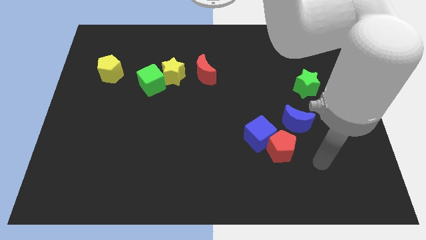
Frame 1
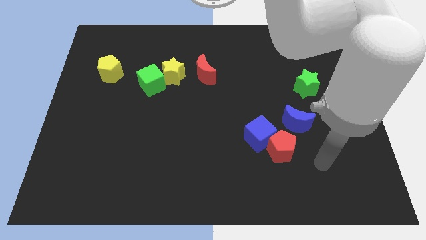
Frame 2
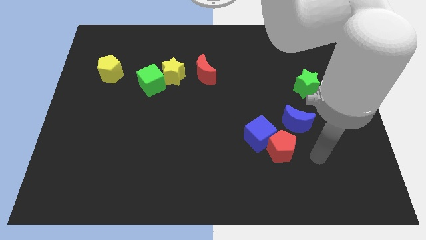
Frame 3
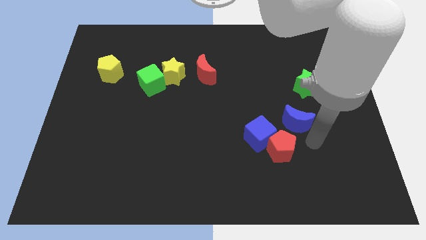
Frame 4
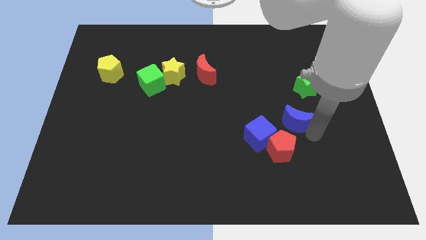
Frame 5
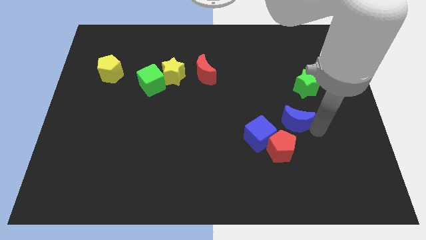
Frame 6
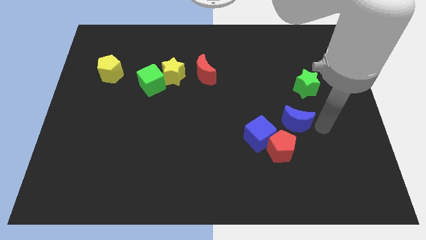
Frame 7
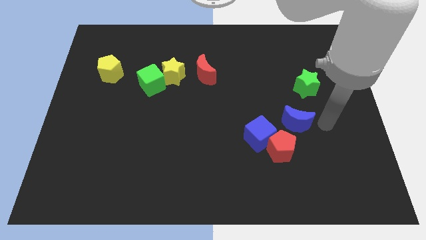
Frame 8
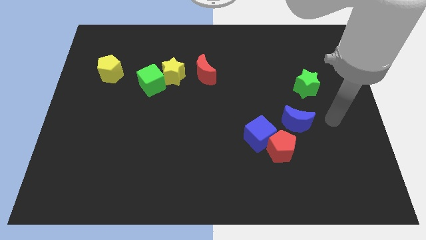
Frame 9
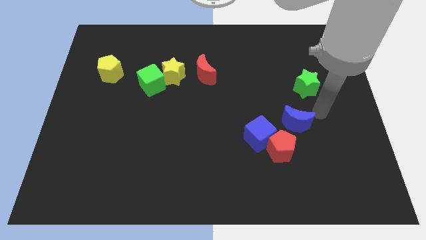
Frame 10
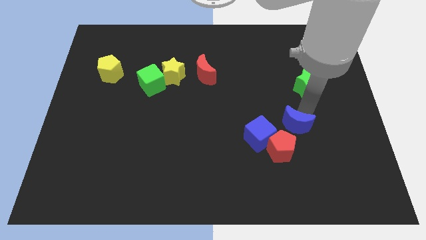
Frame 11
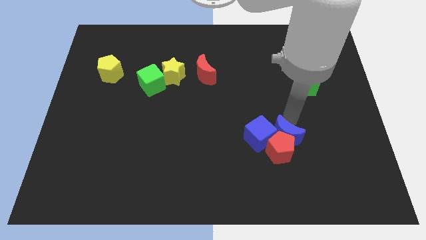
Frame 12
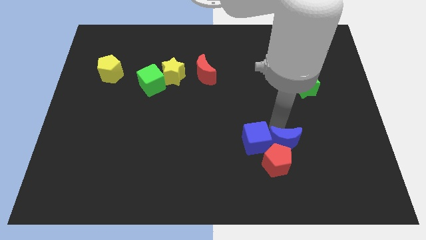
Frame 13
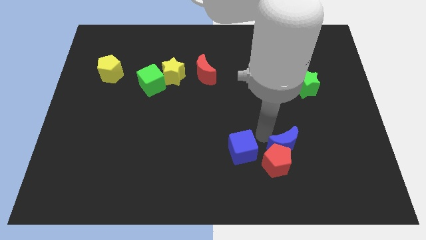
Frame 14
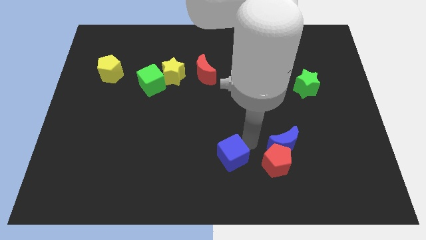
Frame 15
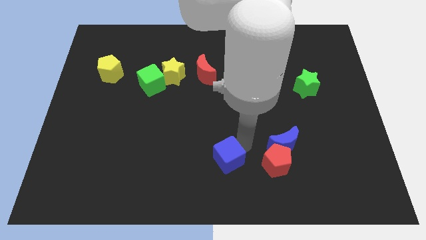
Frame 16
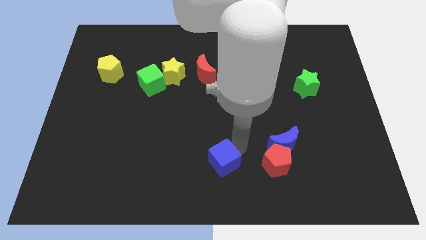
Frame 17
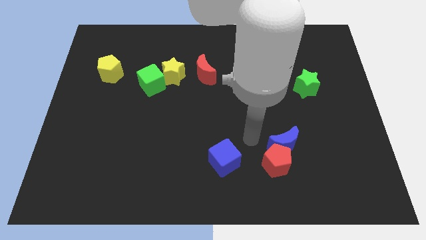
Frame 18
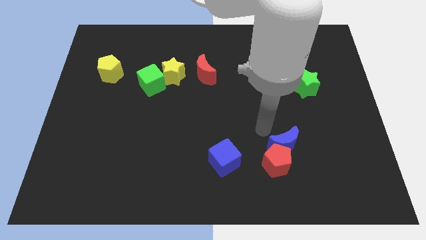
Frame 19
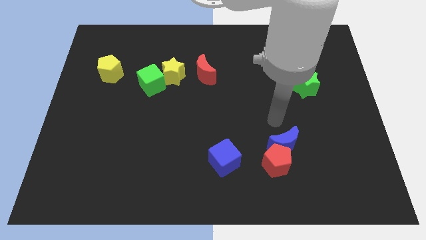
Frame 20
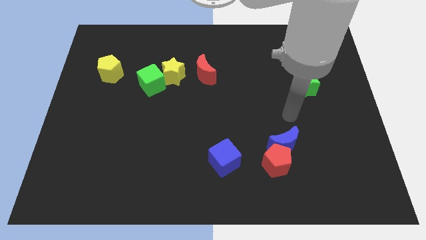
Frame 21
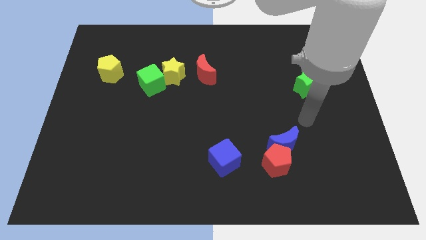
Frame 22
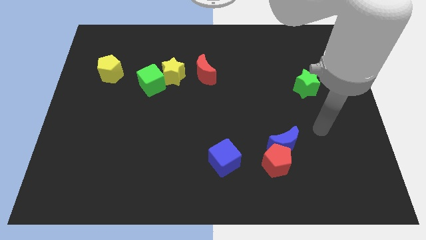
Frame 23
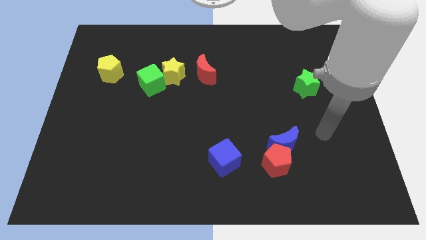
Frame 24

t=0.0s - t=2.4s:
push the blue cube away from the red pentagon

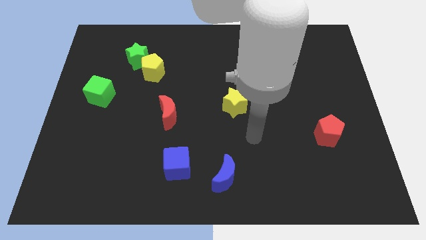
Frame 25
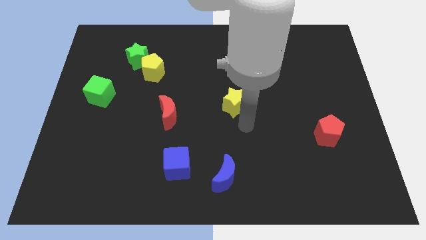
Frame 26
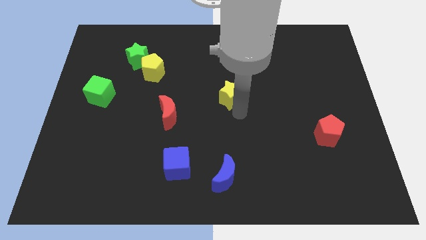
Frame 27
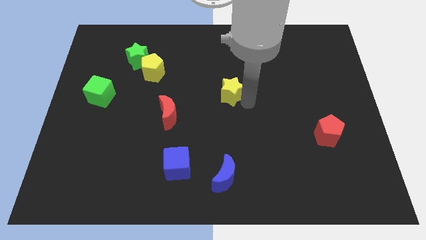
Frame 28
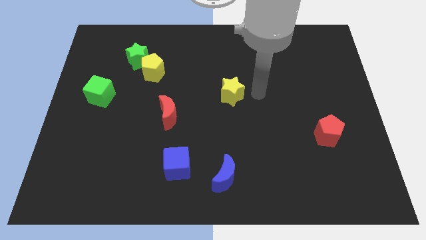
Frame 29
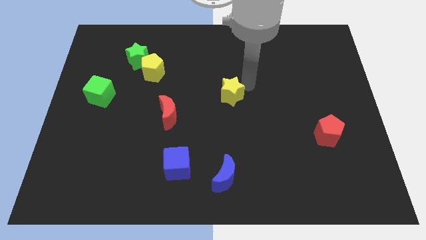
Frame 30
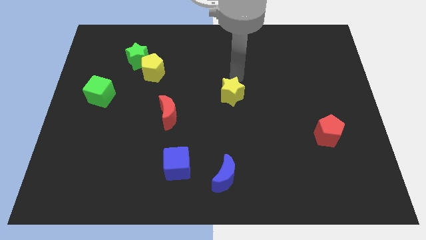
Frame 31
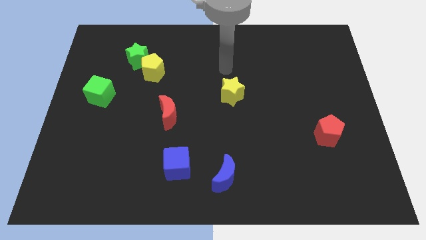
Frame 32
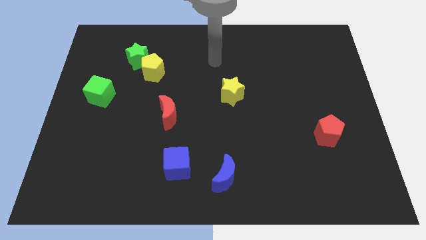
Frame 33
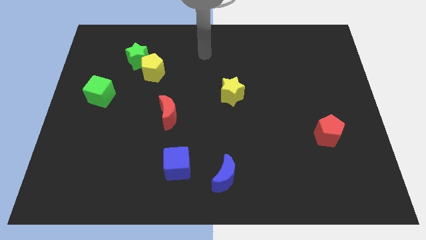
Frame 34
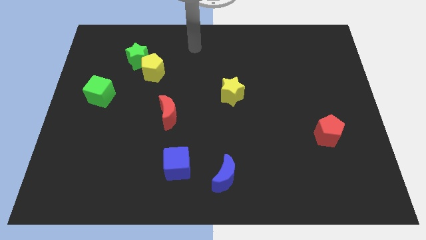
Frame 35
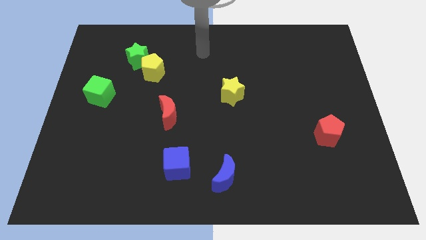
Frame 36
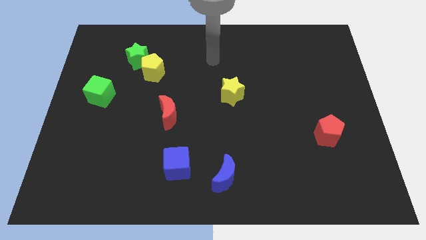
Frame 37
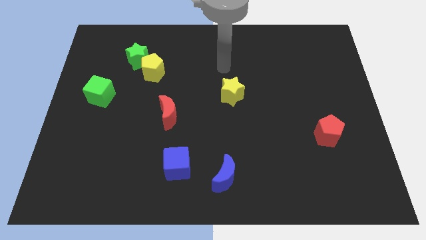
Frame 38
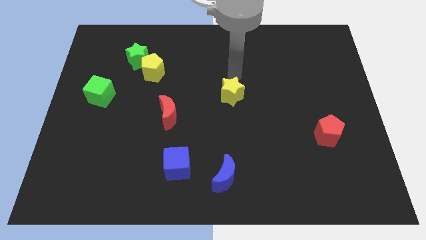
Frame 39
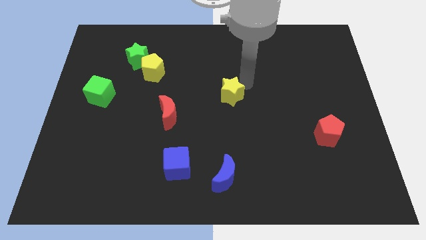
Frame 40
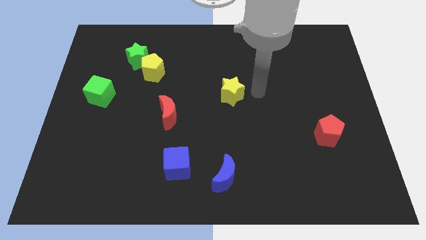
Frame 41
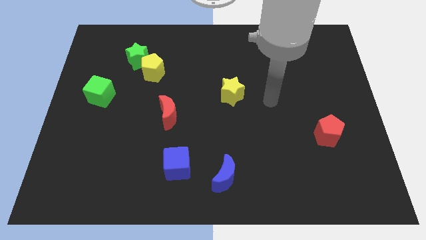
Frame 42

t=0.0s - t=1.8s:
point your arm at the right of the yellow star

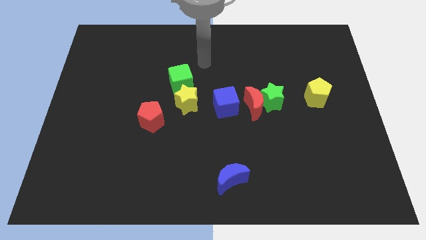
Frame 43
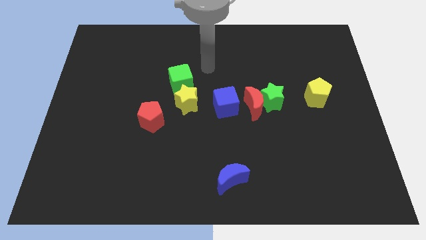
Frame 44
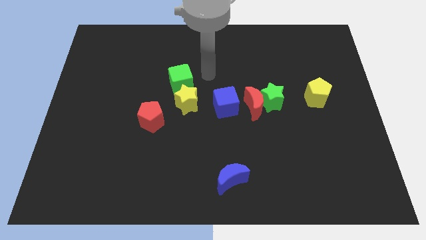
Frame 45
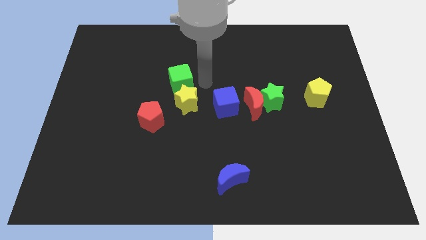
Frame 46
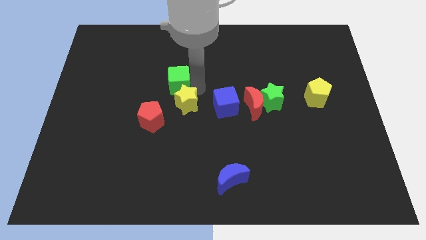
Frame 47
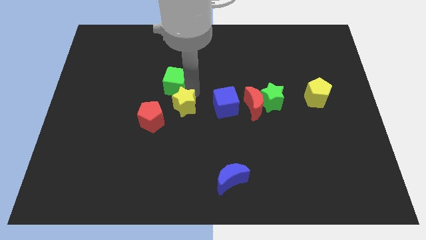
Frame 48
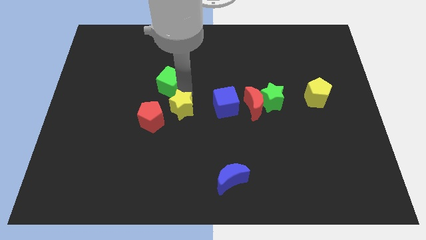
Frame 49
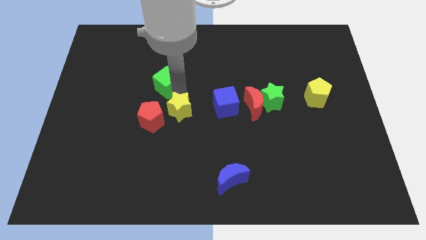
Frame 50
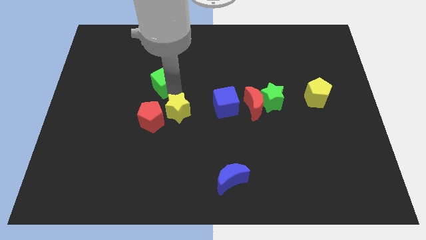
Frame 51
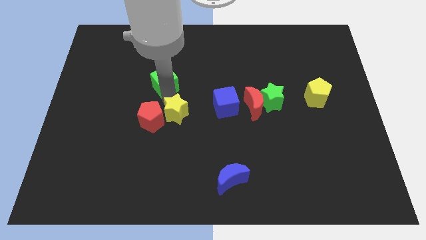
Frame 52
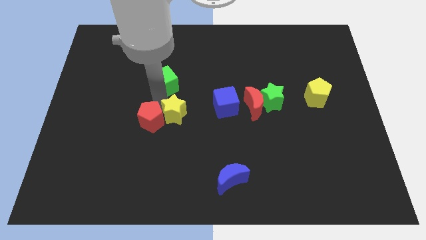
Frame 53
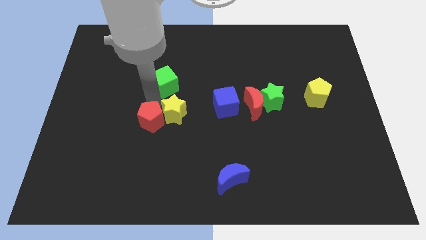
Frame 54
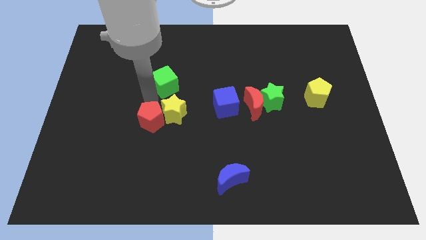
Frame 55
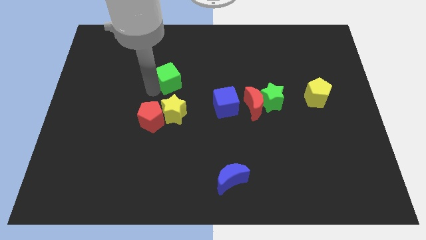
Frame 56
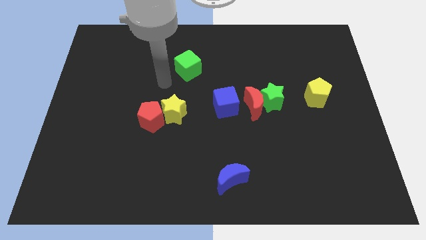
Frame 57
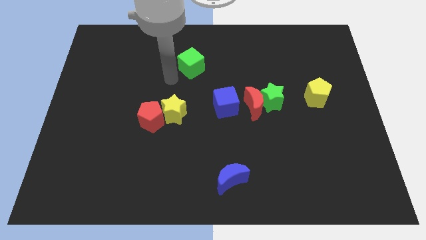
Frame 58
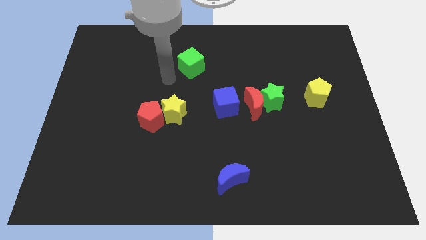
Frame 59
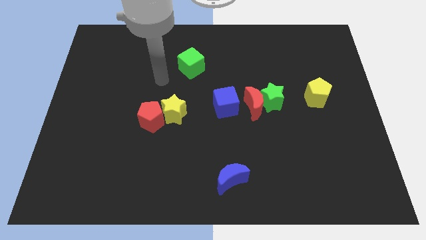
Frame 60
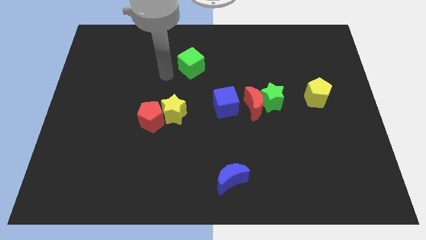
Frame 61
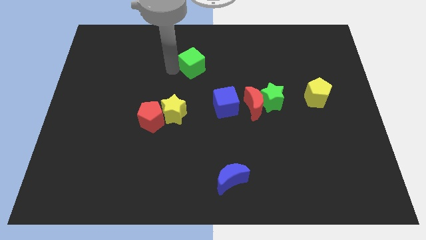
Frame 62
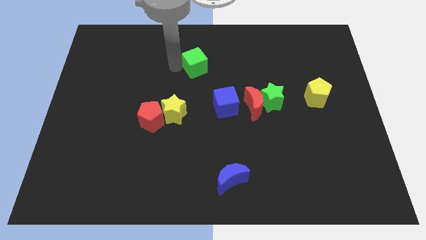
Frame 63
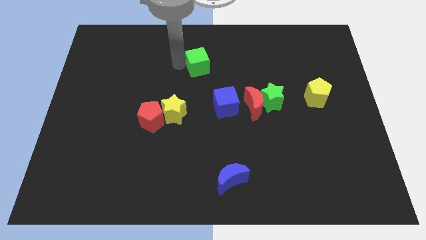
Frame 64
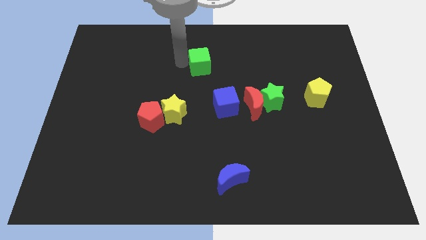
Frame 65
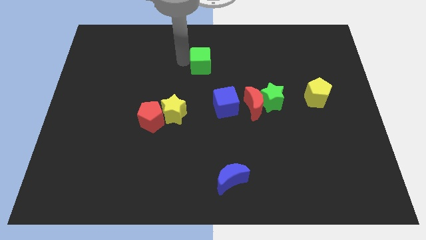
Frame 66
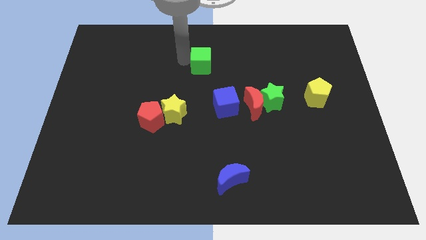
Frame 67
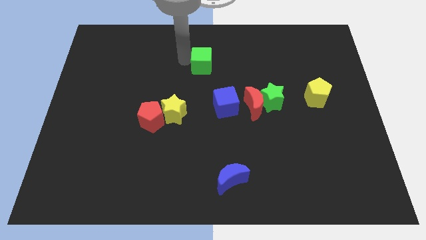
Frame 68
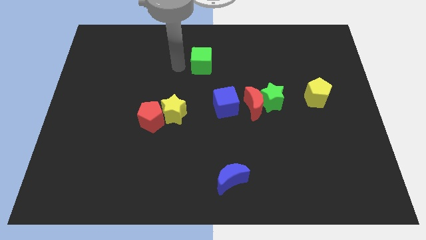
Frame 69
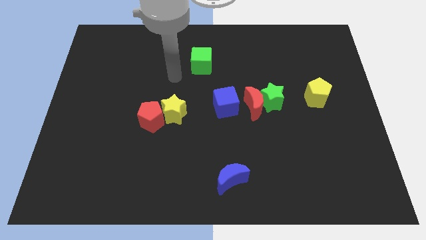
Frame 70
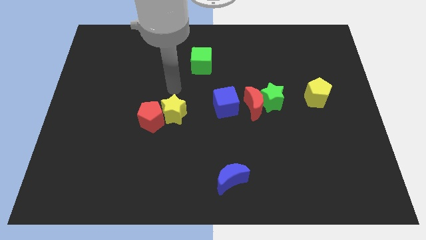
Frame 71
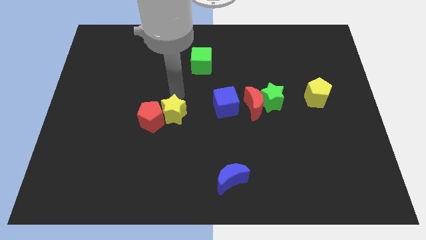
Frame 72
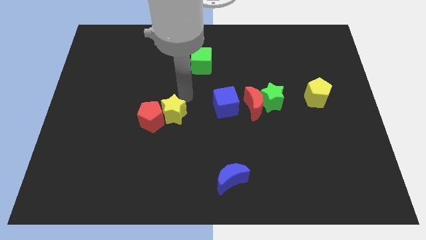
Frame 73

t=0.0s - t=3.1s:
move the green cube away from the yellow star

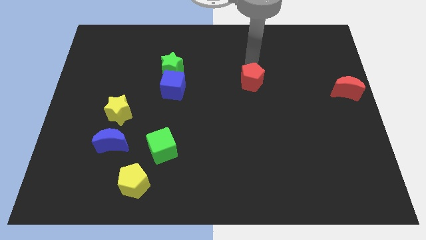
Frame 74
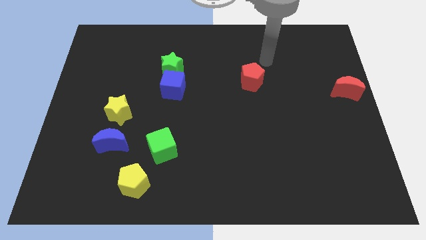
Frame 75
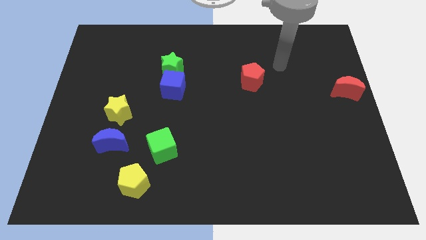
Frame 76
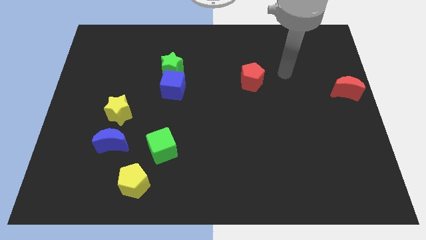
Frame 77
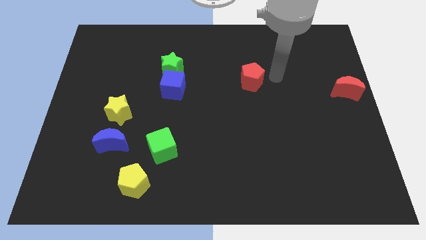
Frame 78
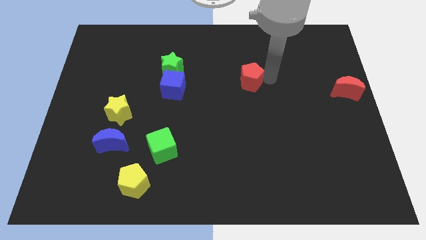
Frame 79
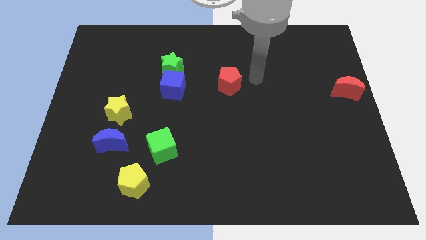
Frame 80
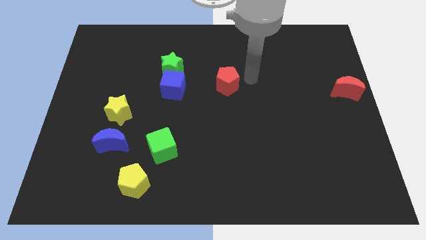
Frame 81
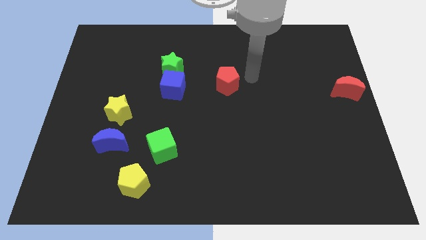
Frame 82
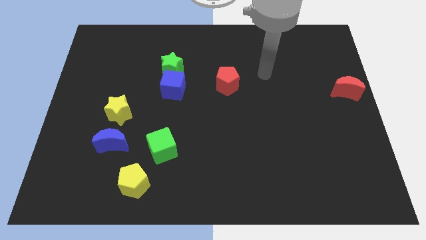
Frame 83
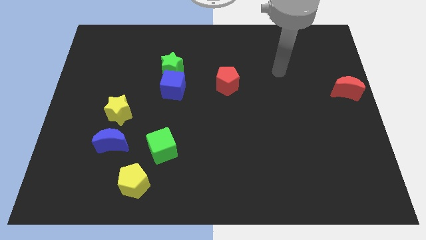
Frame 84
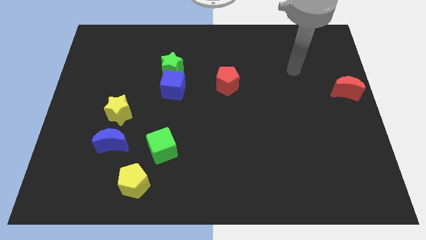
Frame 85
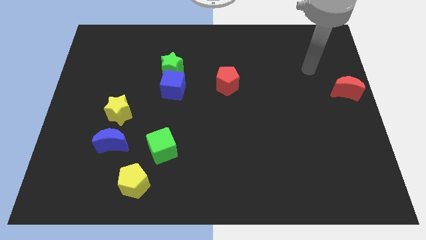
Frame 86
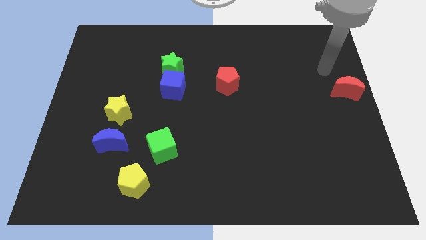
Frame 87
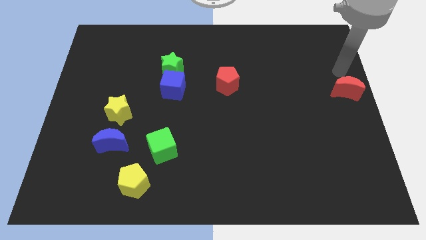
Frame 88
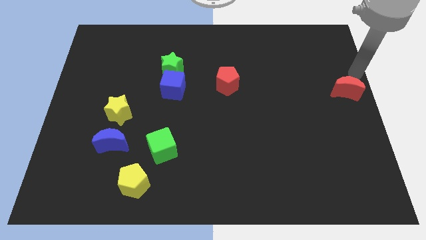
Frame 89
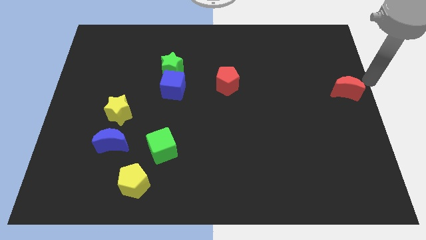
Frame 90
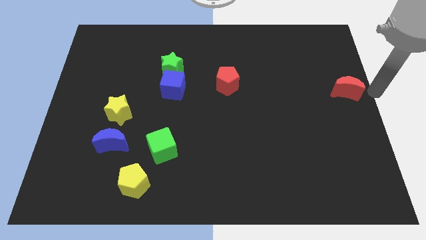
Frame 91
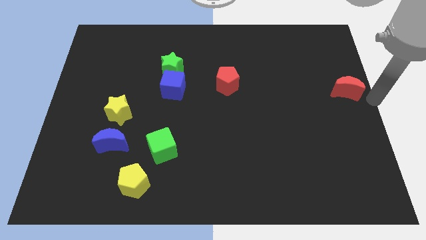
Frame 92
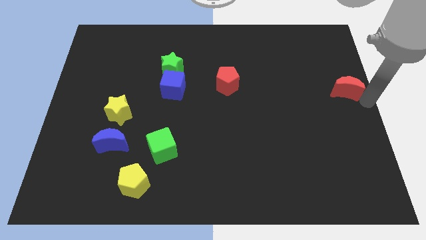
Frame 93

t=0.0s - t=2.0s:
move red pentagon towards center of the board
